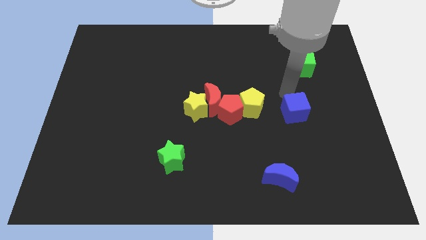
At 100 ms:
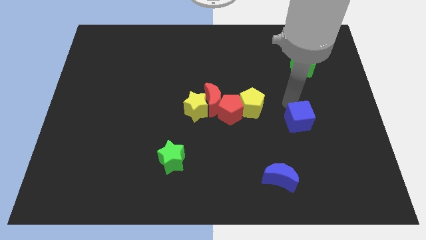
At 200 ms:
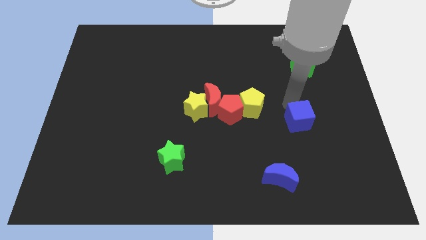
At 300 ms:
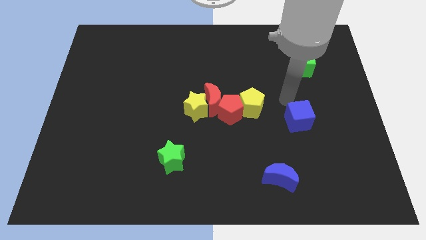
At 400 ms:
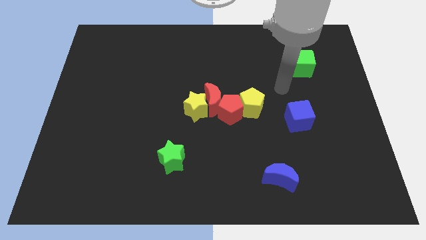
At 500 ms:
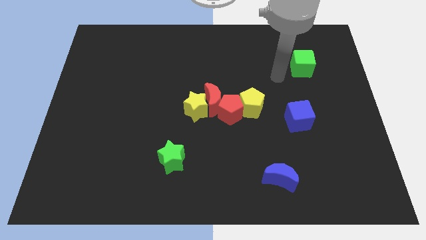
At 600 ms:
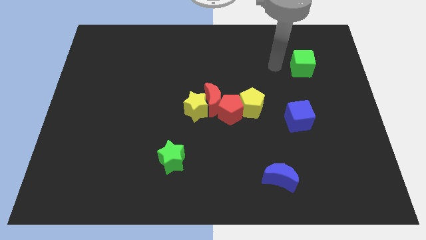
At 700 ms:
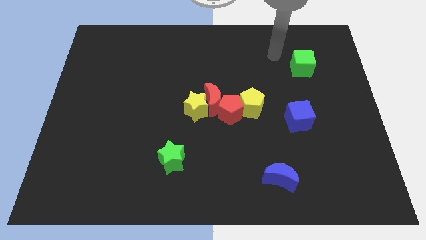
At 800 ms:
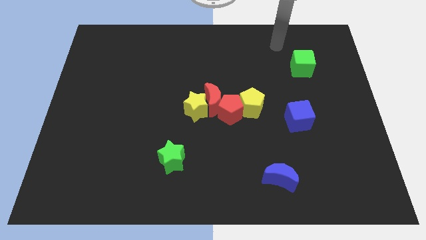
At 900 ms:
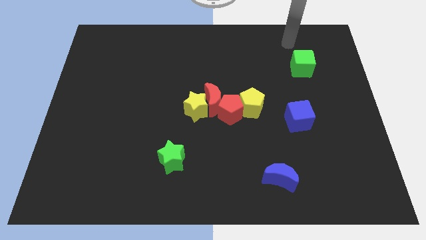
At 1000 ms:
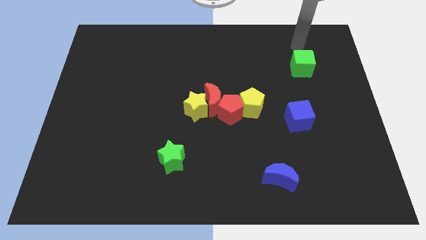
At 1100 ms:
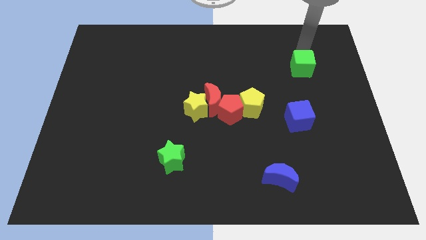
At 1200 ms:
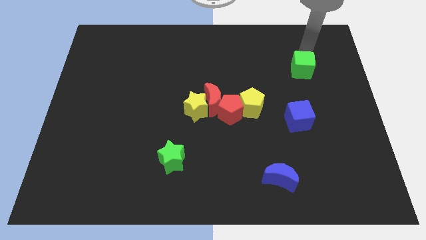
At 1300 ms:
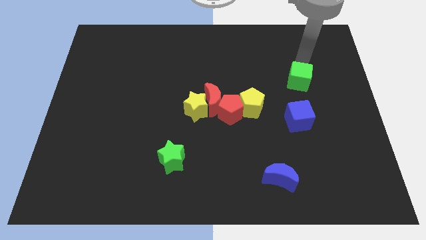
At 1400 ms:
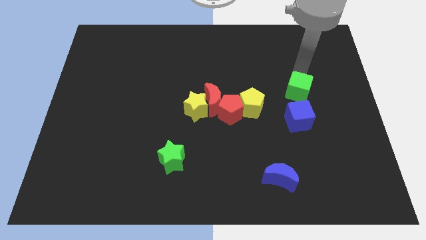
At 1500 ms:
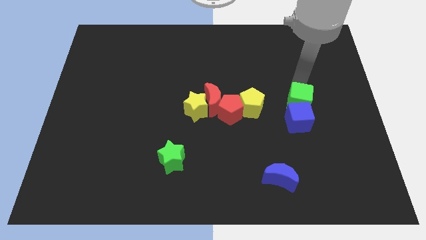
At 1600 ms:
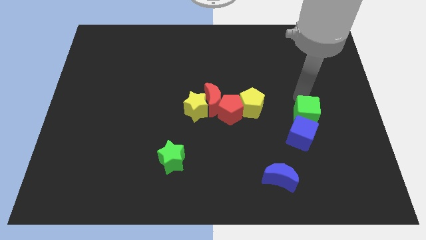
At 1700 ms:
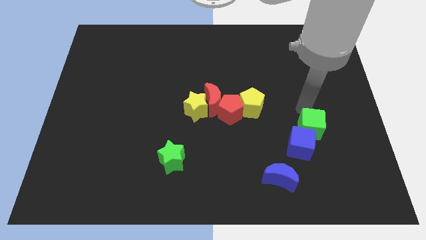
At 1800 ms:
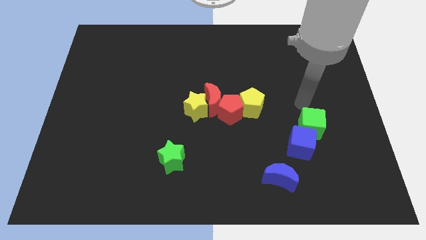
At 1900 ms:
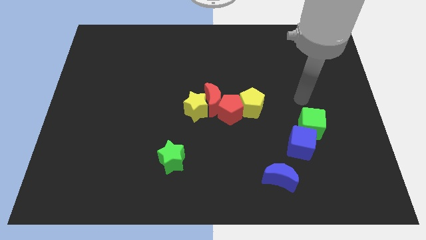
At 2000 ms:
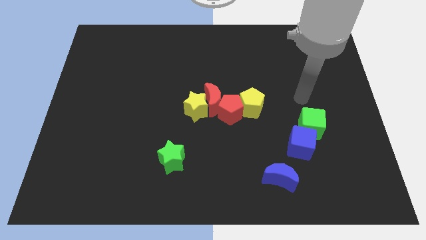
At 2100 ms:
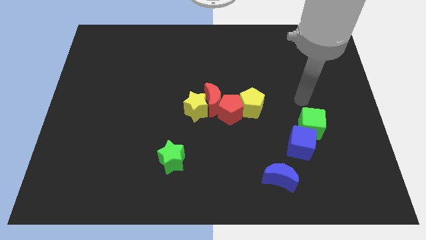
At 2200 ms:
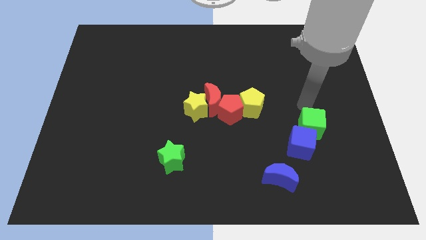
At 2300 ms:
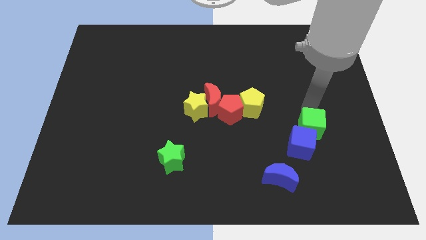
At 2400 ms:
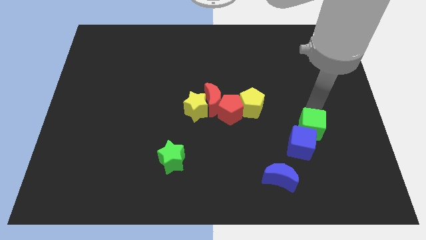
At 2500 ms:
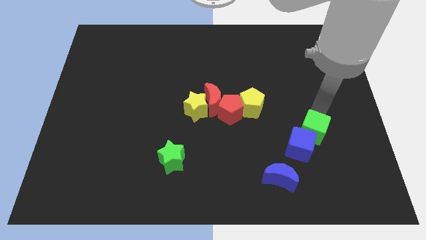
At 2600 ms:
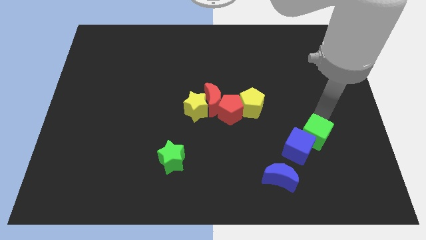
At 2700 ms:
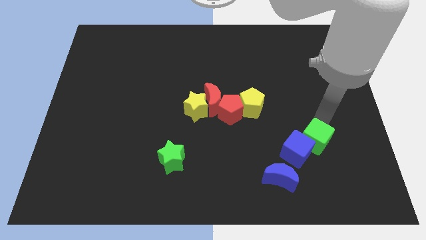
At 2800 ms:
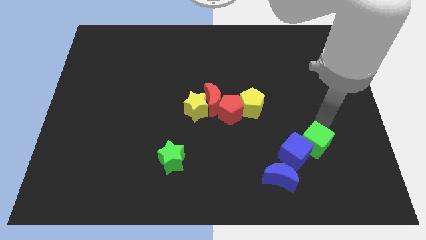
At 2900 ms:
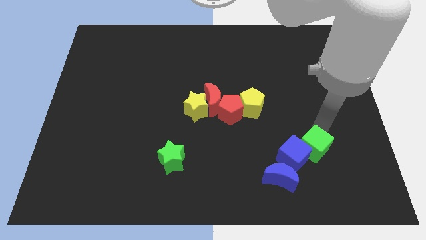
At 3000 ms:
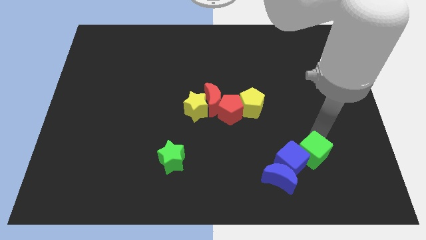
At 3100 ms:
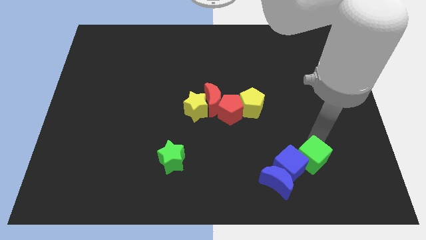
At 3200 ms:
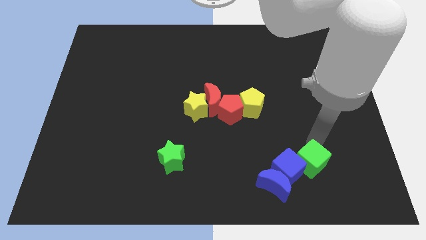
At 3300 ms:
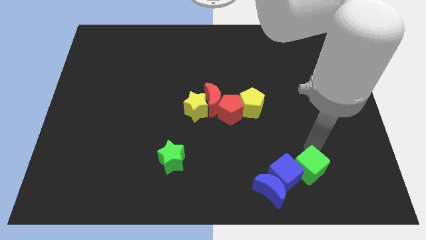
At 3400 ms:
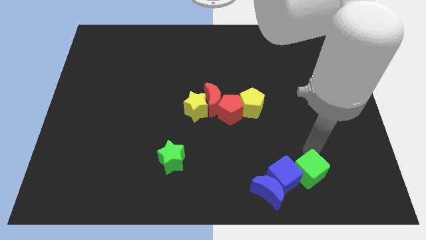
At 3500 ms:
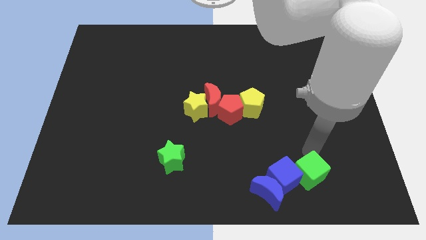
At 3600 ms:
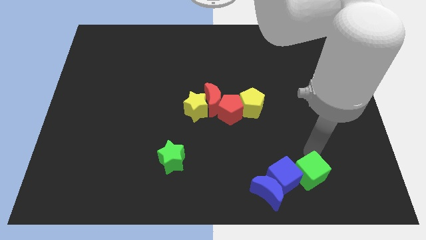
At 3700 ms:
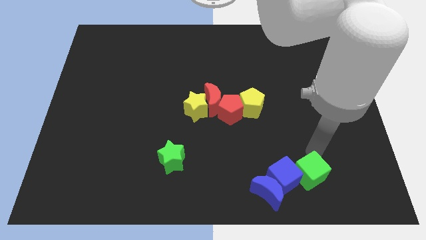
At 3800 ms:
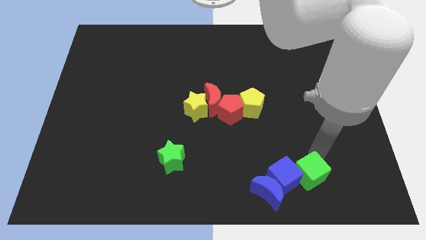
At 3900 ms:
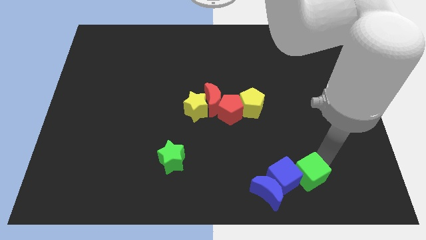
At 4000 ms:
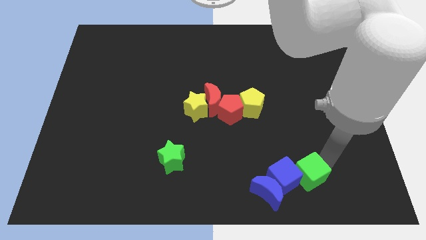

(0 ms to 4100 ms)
push green cube into blue blocks

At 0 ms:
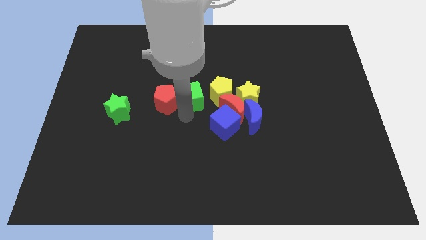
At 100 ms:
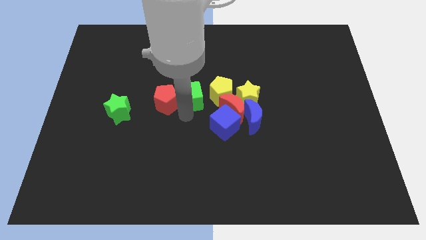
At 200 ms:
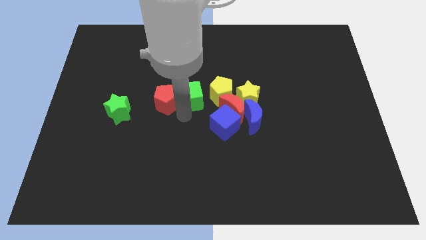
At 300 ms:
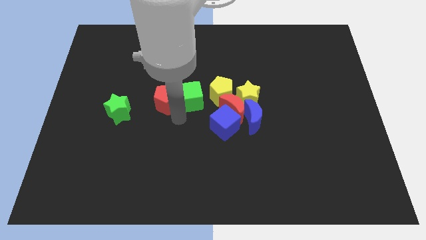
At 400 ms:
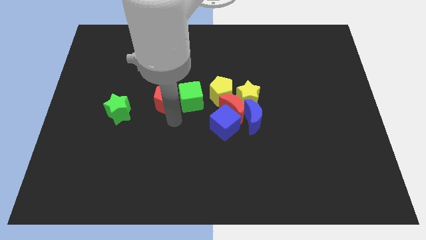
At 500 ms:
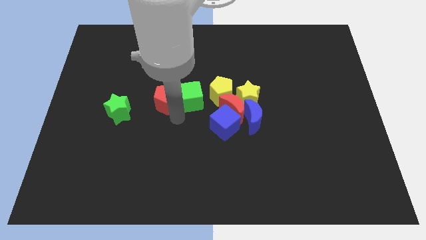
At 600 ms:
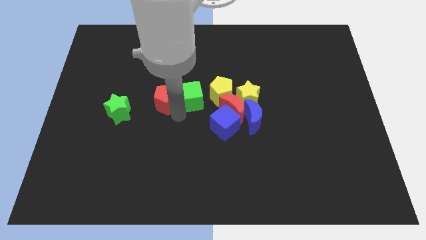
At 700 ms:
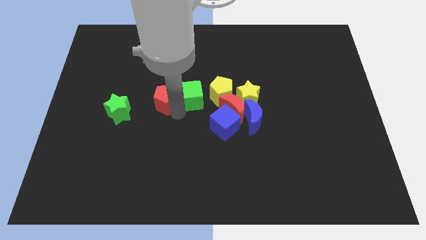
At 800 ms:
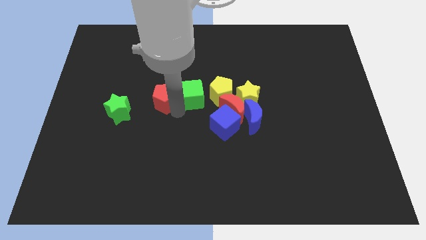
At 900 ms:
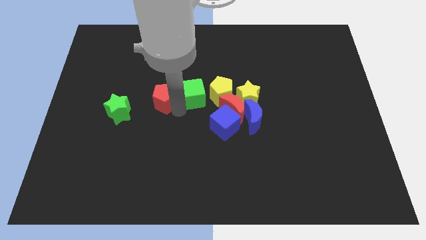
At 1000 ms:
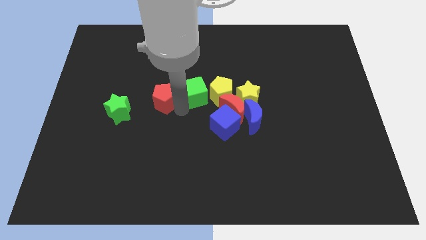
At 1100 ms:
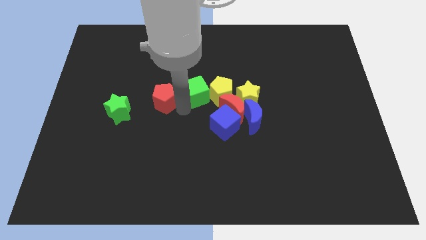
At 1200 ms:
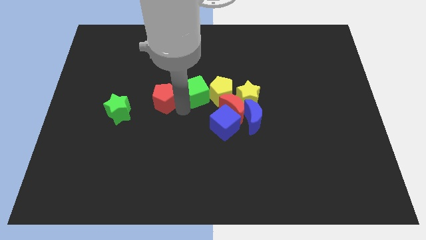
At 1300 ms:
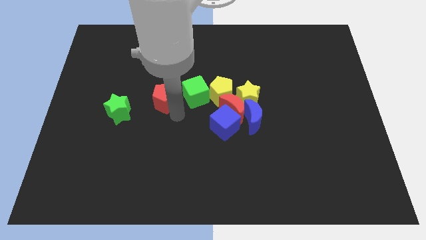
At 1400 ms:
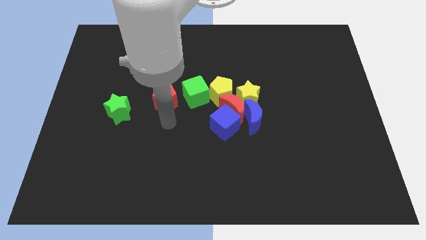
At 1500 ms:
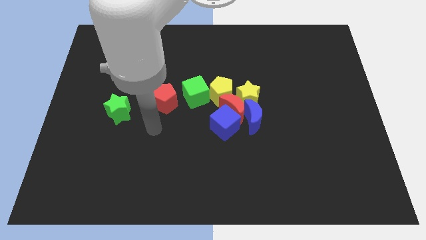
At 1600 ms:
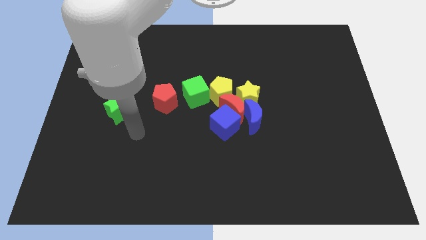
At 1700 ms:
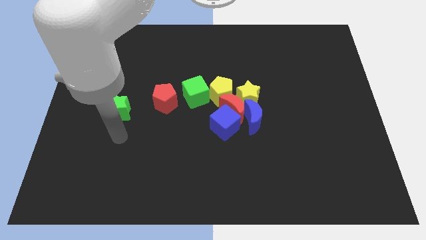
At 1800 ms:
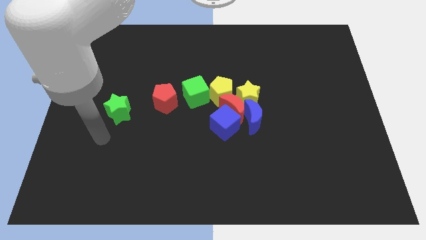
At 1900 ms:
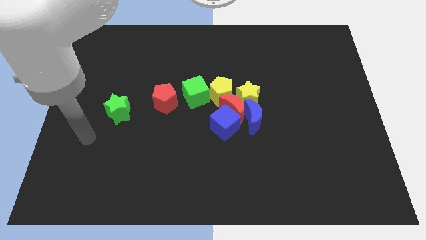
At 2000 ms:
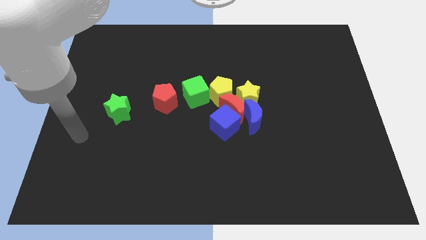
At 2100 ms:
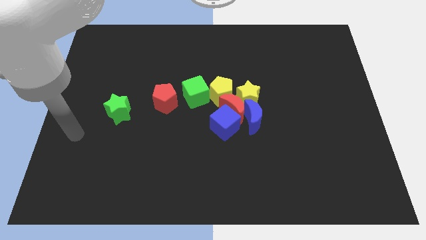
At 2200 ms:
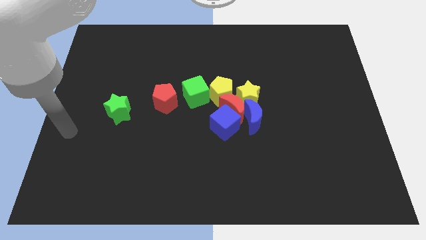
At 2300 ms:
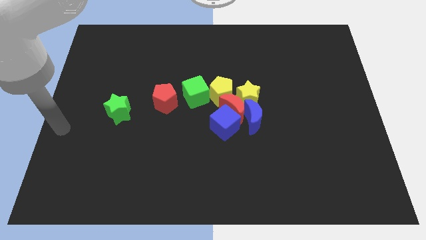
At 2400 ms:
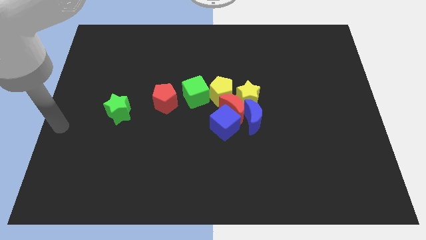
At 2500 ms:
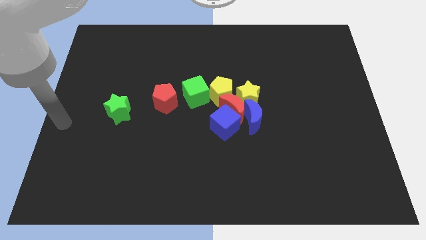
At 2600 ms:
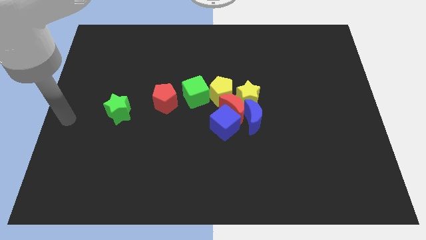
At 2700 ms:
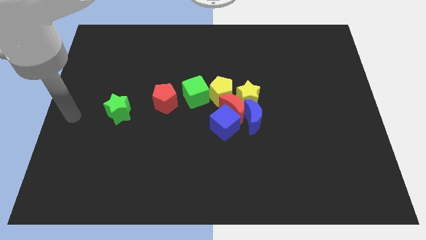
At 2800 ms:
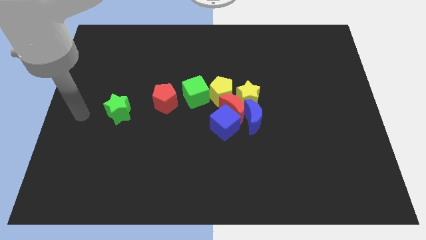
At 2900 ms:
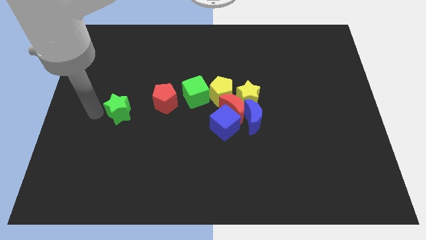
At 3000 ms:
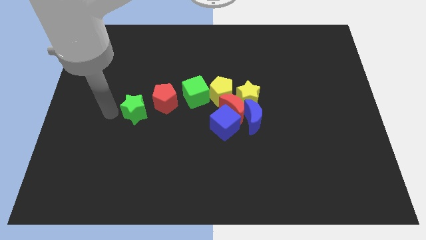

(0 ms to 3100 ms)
place your arm to the left of the green star

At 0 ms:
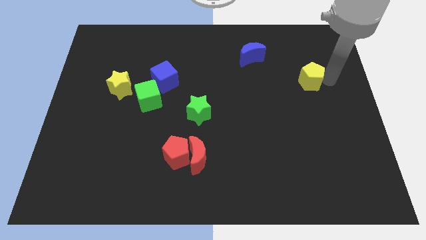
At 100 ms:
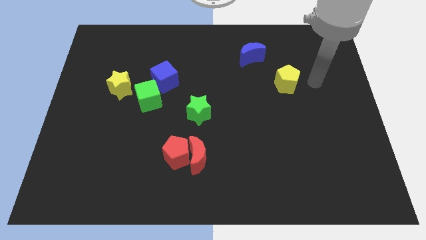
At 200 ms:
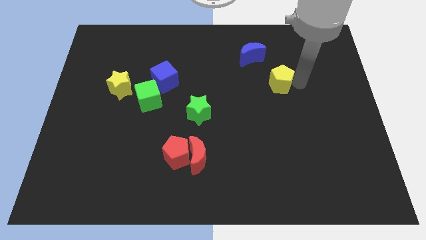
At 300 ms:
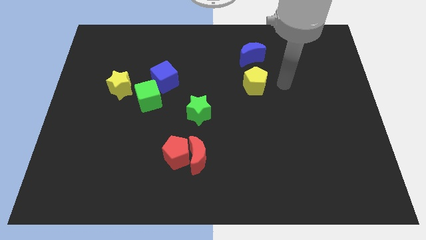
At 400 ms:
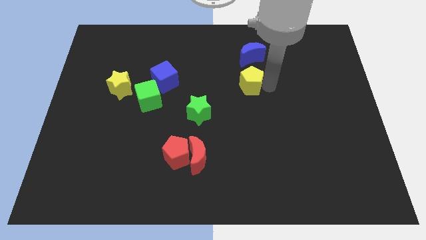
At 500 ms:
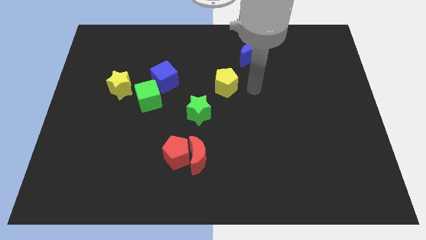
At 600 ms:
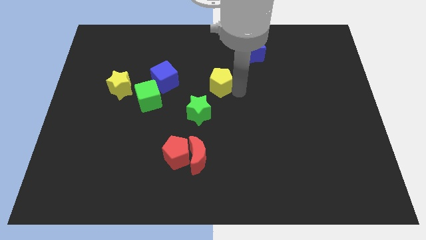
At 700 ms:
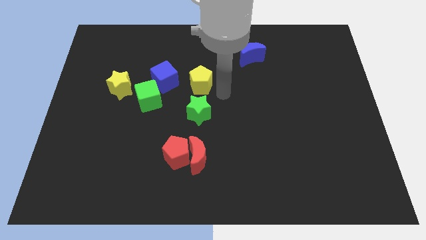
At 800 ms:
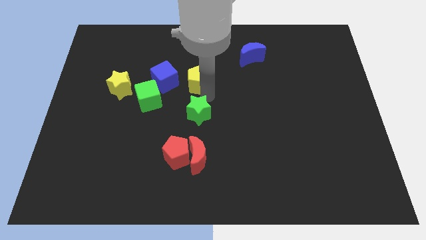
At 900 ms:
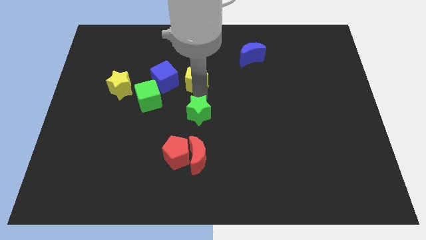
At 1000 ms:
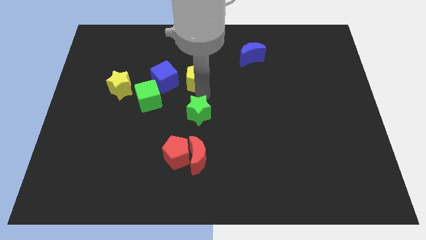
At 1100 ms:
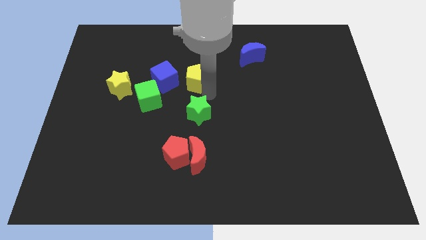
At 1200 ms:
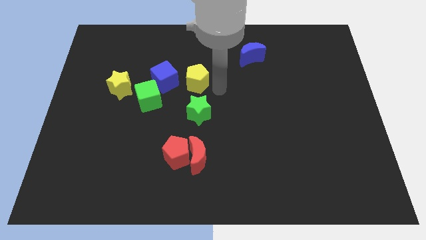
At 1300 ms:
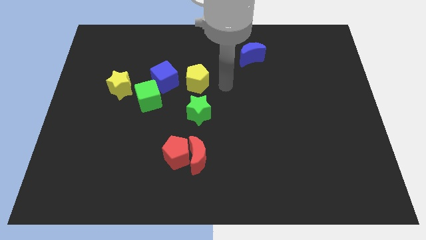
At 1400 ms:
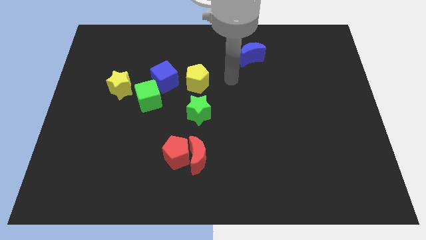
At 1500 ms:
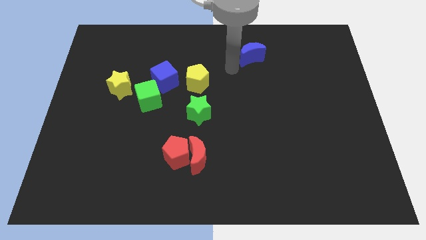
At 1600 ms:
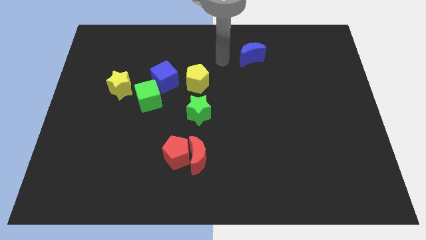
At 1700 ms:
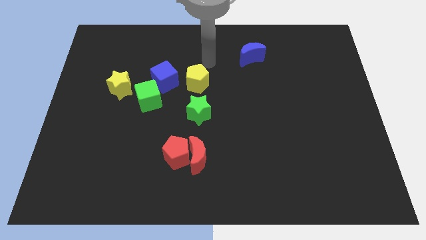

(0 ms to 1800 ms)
move the yellow pentagon to the right side of the blue cube
